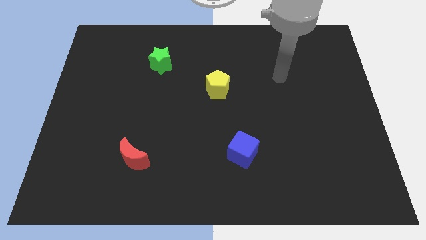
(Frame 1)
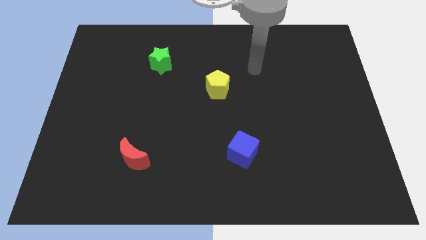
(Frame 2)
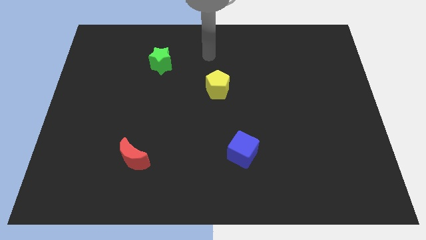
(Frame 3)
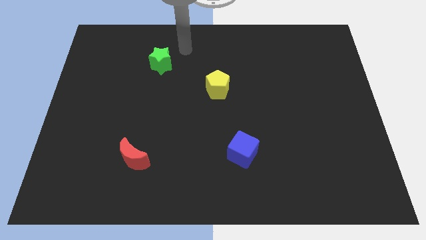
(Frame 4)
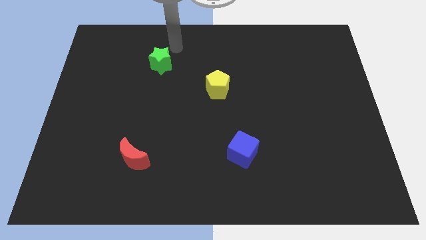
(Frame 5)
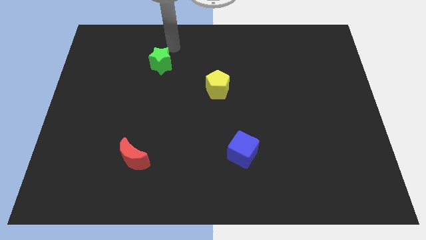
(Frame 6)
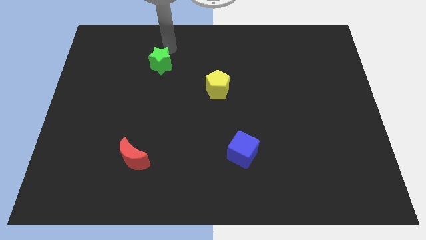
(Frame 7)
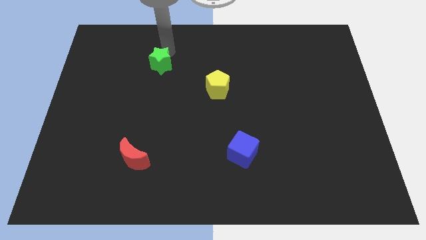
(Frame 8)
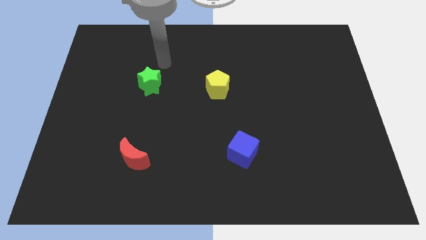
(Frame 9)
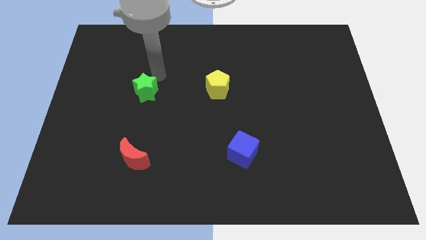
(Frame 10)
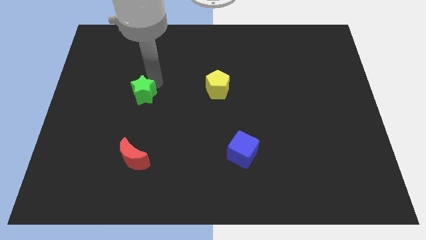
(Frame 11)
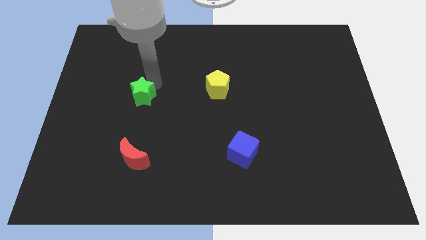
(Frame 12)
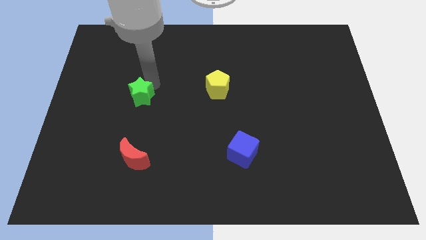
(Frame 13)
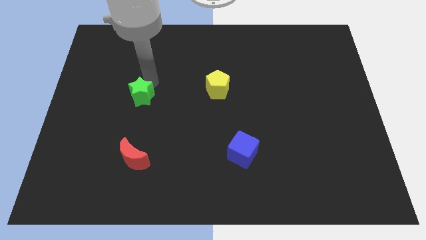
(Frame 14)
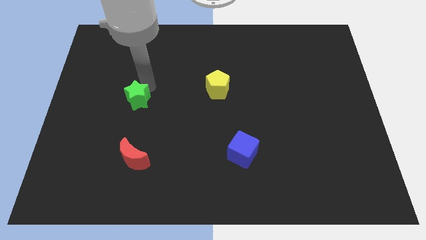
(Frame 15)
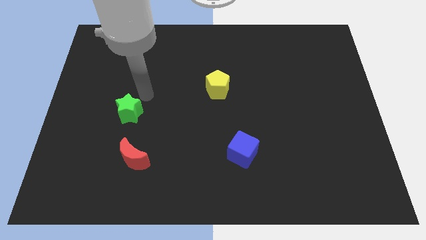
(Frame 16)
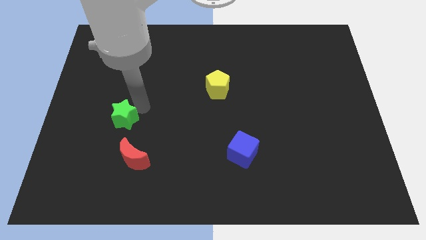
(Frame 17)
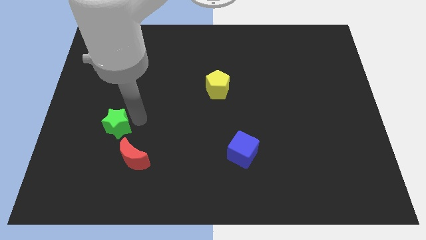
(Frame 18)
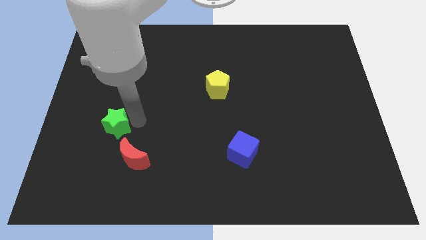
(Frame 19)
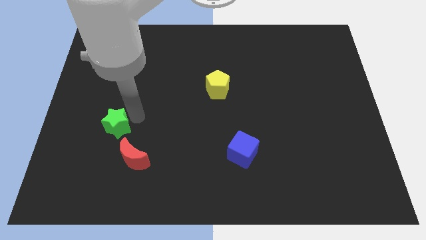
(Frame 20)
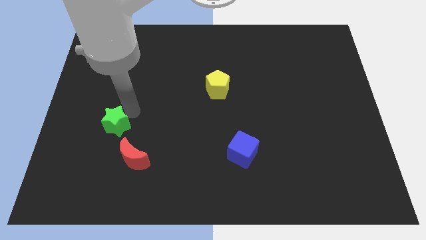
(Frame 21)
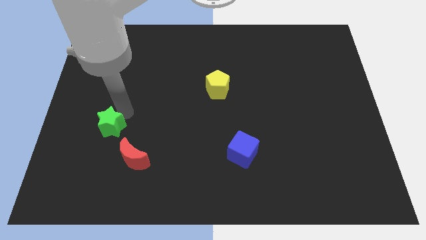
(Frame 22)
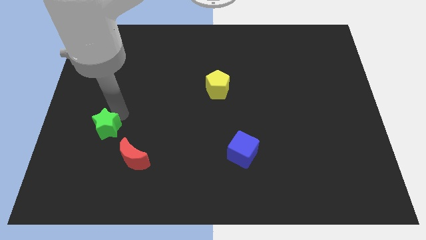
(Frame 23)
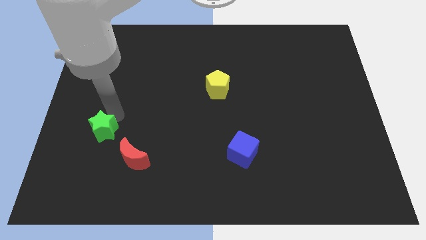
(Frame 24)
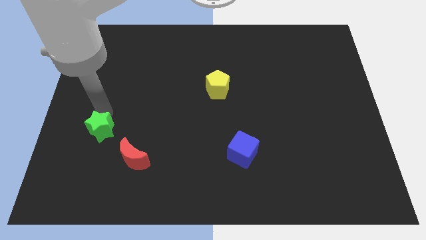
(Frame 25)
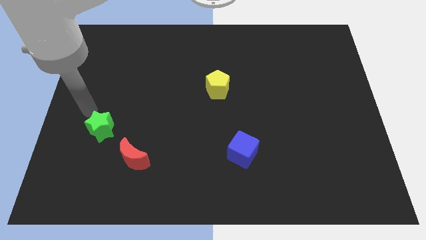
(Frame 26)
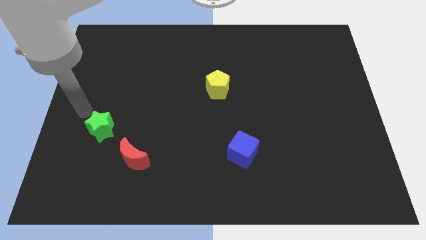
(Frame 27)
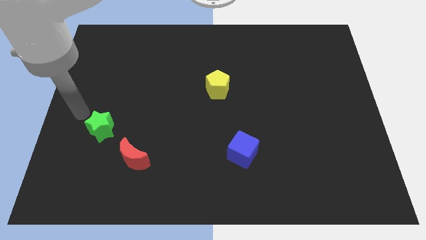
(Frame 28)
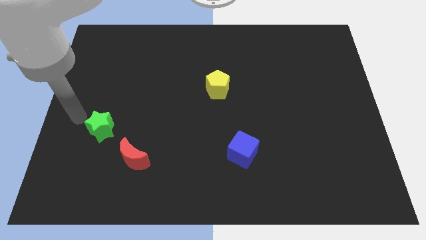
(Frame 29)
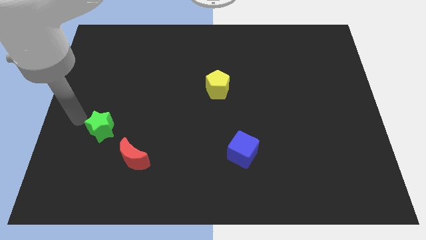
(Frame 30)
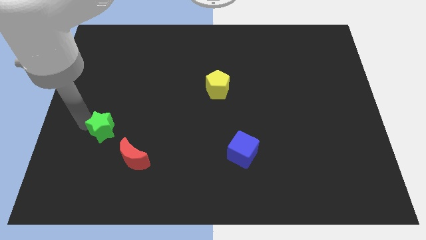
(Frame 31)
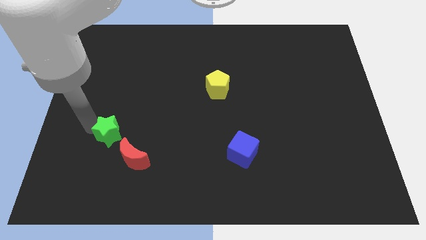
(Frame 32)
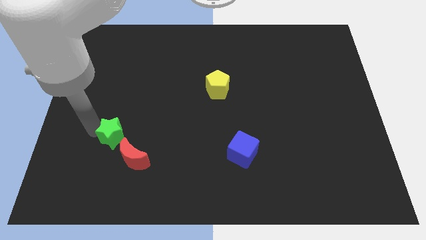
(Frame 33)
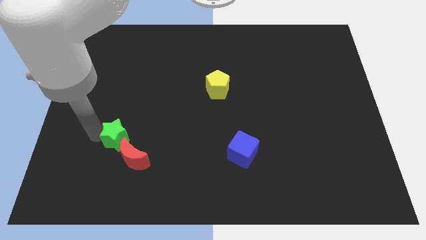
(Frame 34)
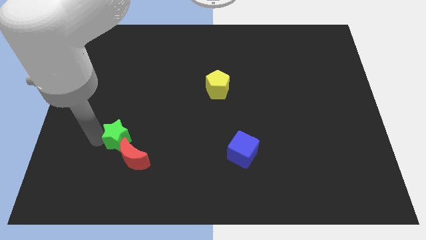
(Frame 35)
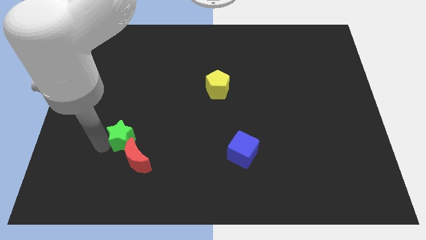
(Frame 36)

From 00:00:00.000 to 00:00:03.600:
put the green block close to the red block

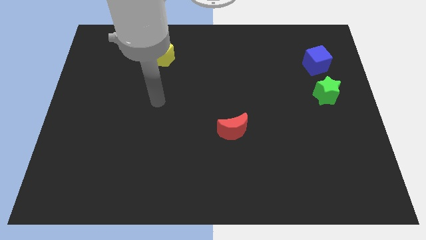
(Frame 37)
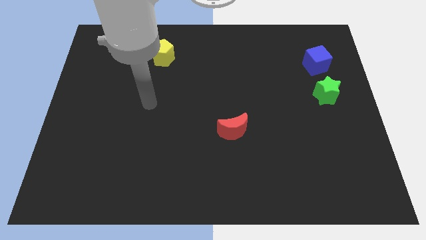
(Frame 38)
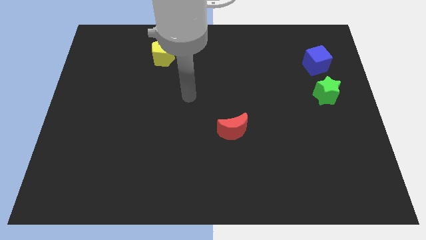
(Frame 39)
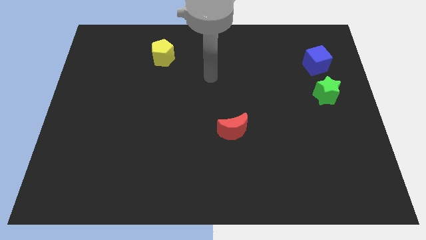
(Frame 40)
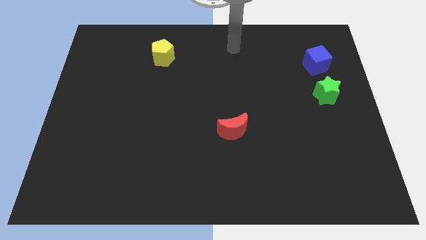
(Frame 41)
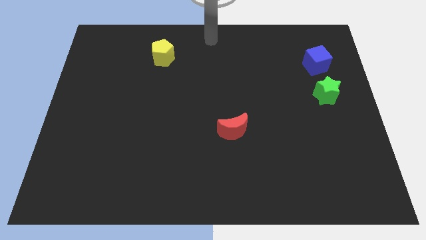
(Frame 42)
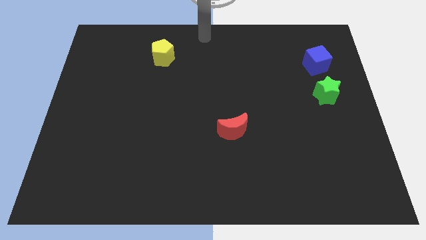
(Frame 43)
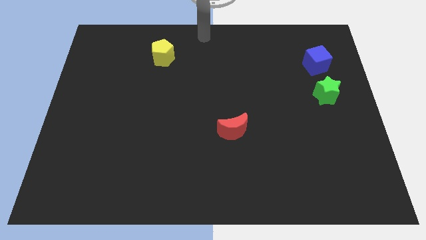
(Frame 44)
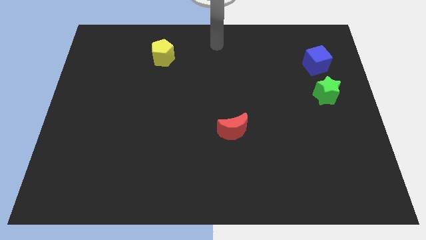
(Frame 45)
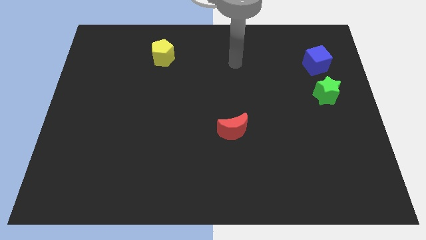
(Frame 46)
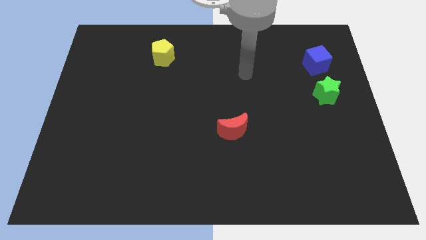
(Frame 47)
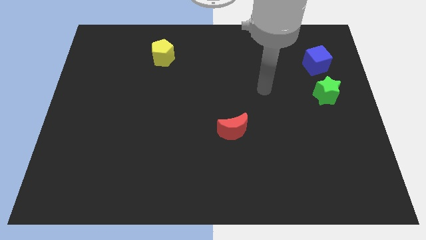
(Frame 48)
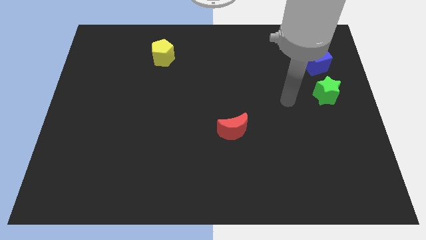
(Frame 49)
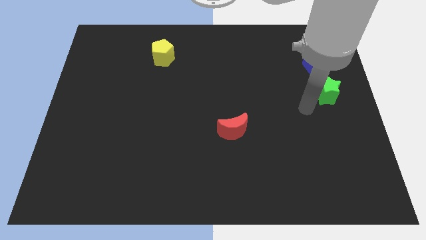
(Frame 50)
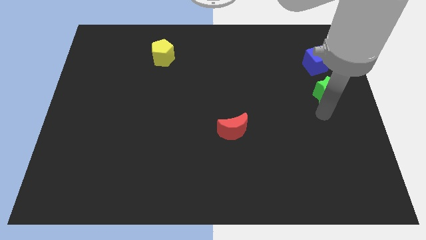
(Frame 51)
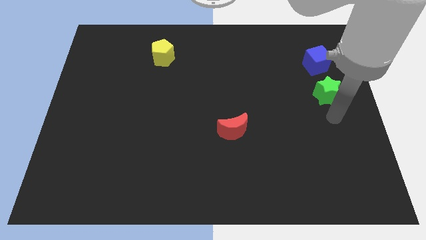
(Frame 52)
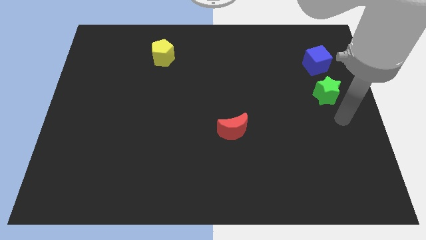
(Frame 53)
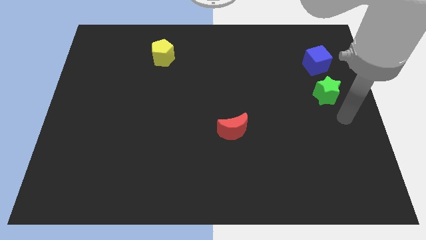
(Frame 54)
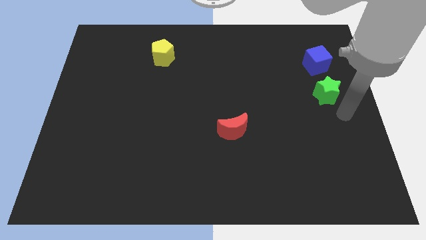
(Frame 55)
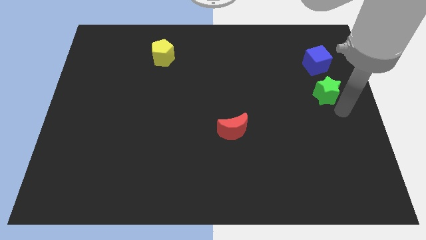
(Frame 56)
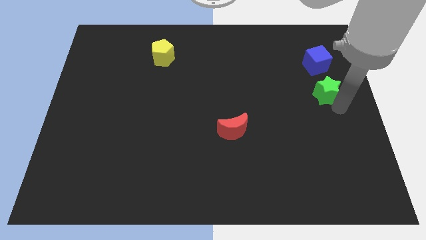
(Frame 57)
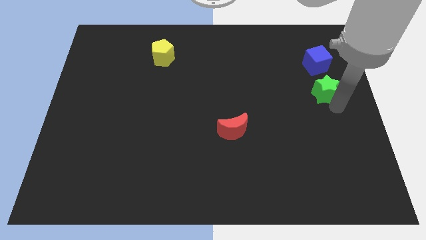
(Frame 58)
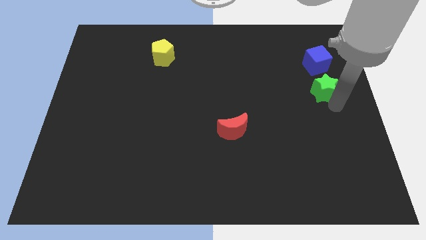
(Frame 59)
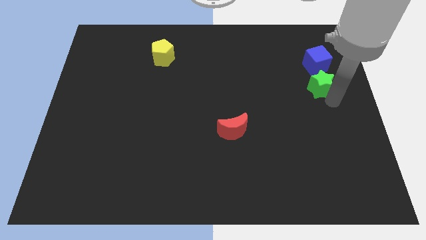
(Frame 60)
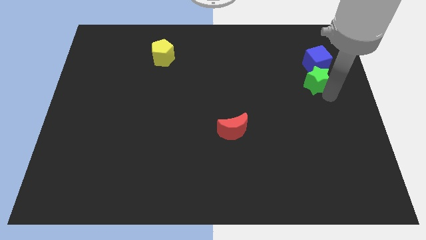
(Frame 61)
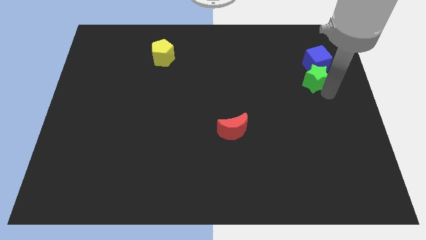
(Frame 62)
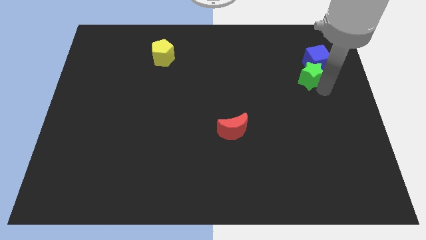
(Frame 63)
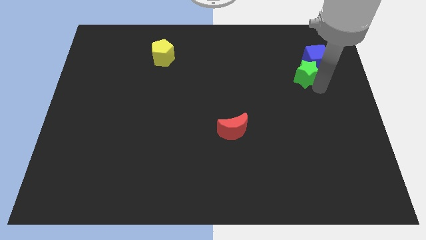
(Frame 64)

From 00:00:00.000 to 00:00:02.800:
push the star close to the blue block

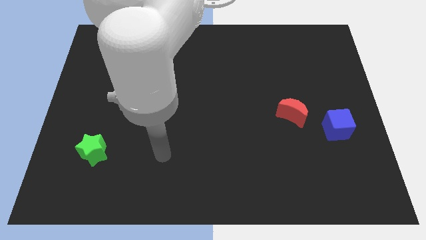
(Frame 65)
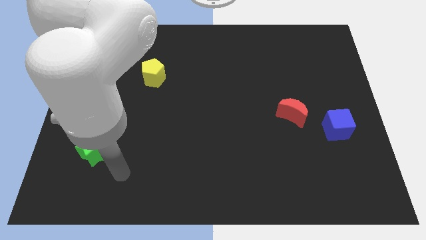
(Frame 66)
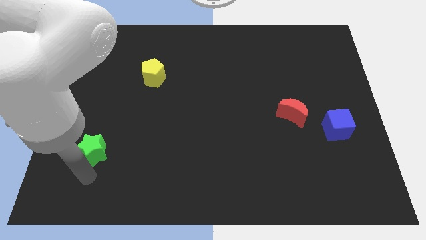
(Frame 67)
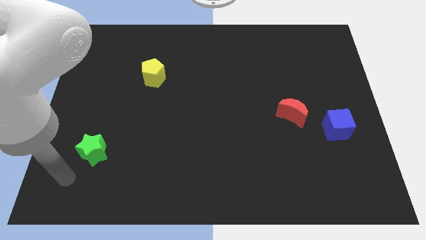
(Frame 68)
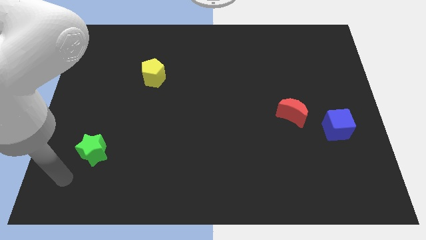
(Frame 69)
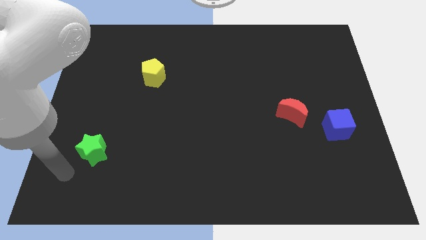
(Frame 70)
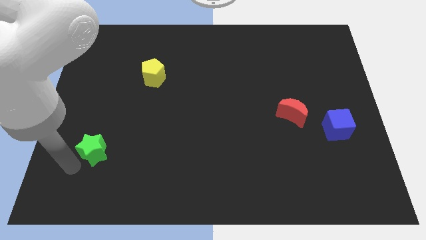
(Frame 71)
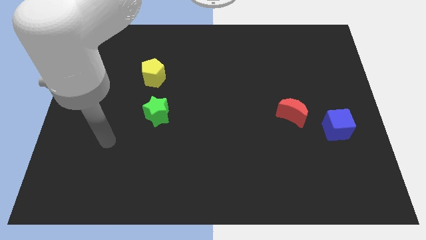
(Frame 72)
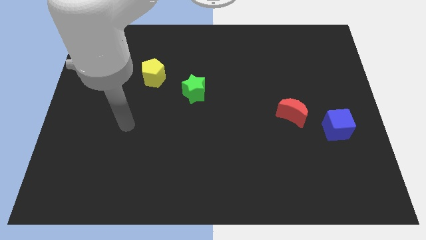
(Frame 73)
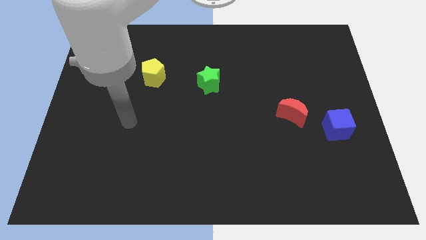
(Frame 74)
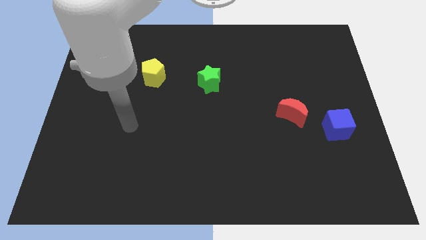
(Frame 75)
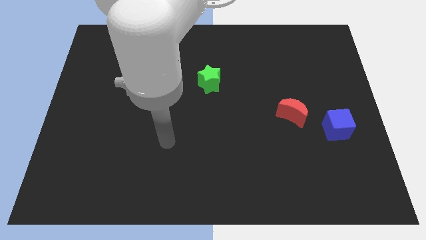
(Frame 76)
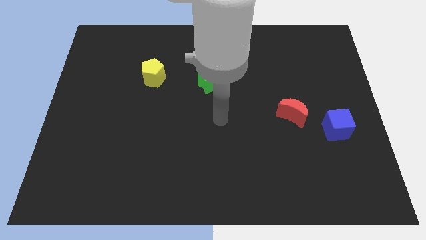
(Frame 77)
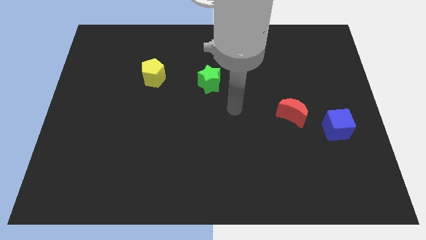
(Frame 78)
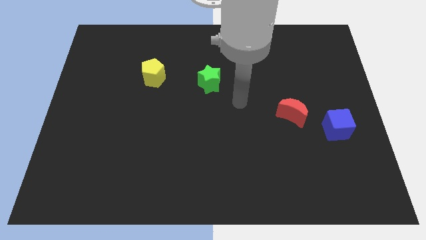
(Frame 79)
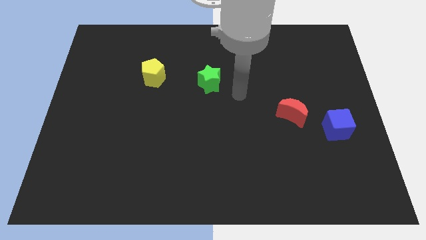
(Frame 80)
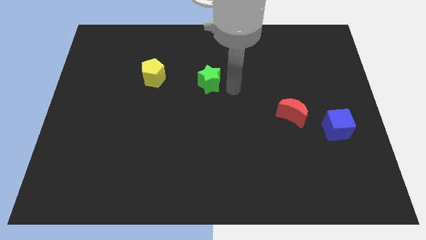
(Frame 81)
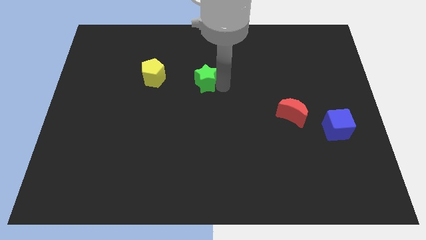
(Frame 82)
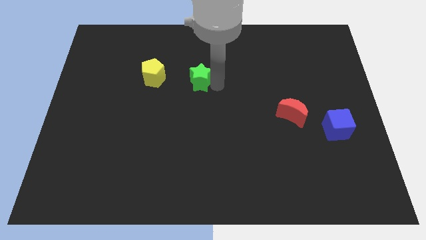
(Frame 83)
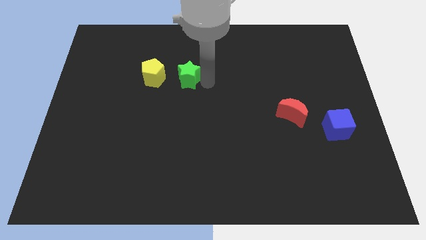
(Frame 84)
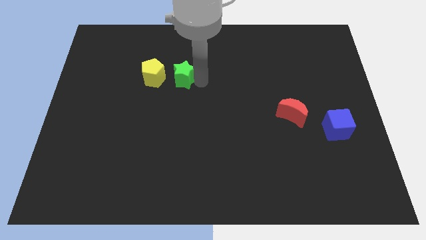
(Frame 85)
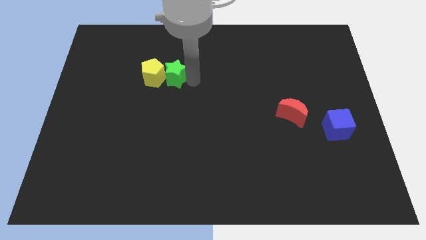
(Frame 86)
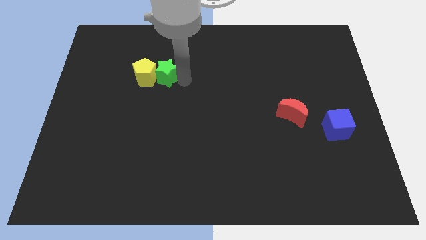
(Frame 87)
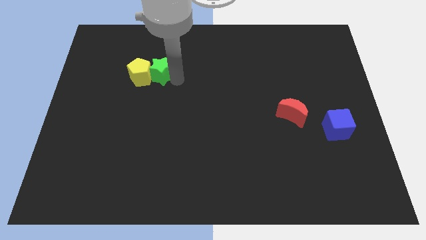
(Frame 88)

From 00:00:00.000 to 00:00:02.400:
move the green star close to the yellow block
